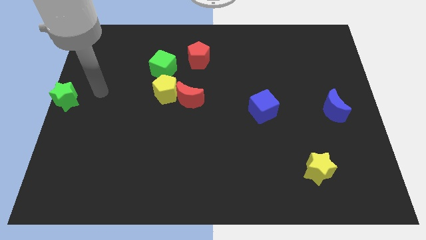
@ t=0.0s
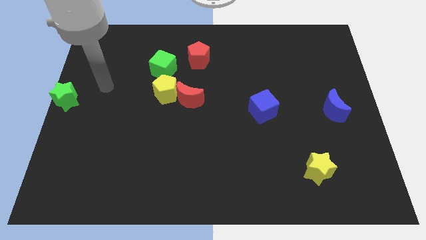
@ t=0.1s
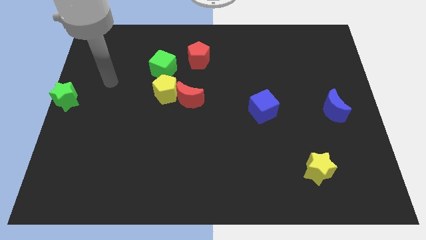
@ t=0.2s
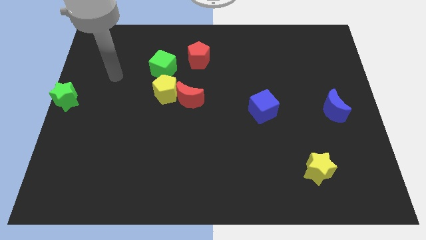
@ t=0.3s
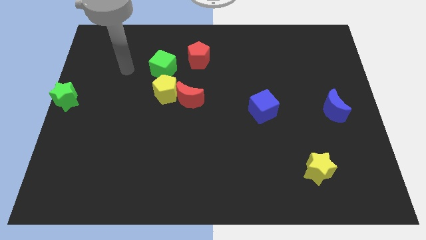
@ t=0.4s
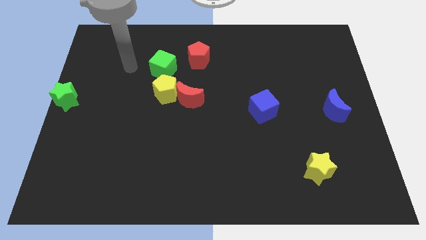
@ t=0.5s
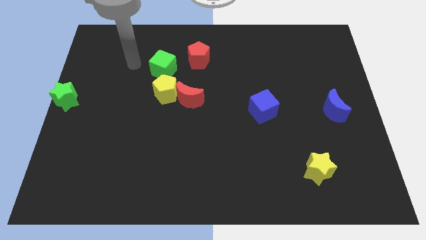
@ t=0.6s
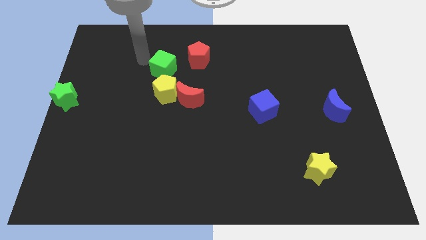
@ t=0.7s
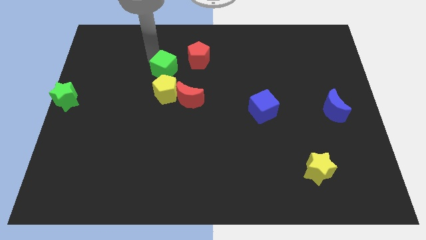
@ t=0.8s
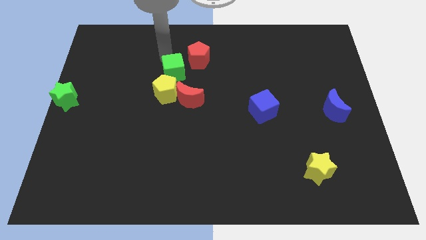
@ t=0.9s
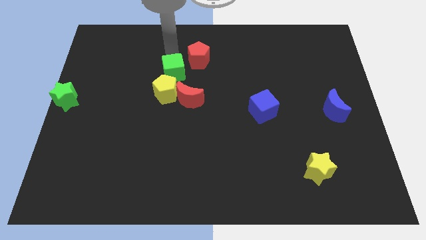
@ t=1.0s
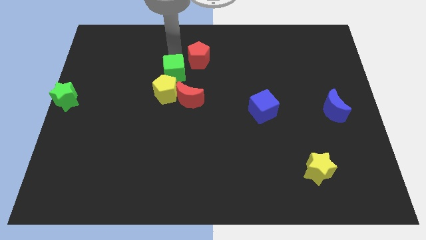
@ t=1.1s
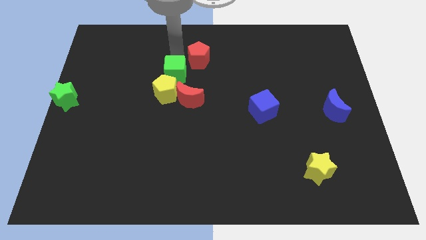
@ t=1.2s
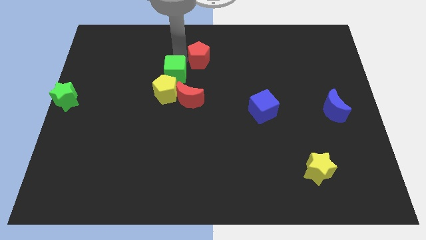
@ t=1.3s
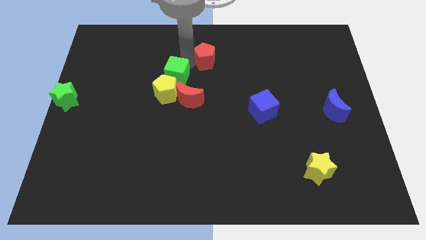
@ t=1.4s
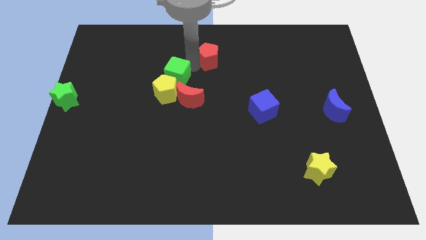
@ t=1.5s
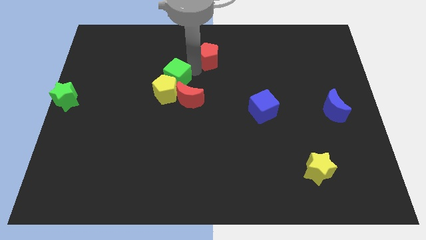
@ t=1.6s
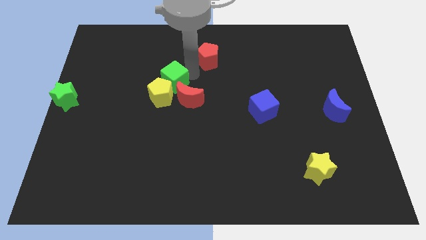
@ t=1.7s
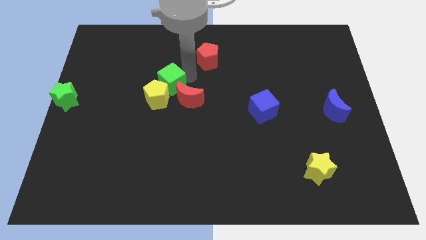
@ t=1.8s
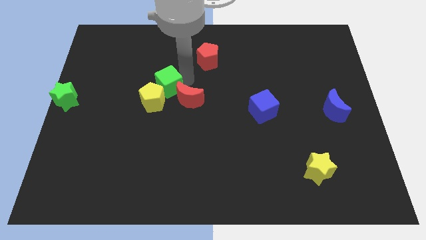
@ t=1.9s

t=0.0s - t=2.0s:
place green cube into the yellow pentagon

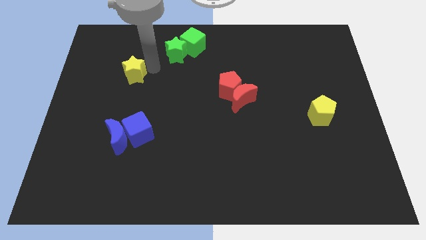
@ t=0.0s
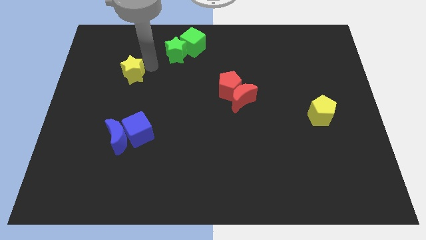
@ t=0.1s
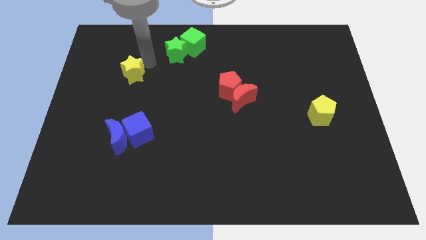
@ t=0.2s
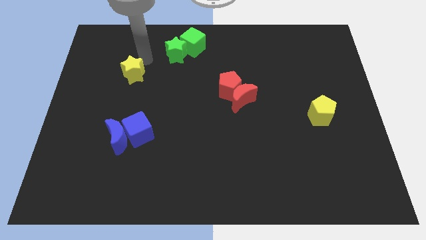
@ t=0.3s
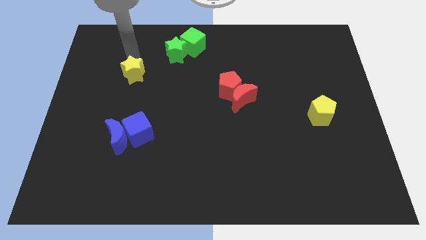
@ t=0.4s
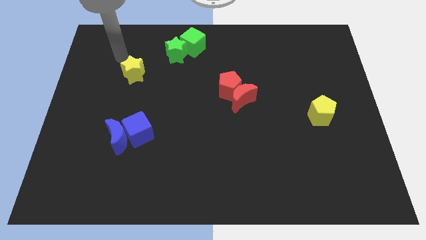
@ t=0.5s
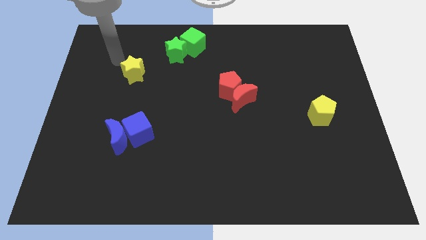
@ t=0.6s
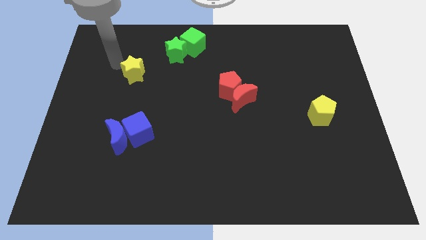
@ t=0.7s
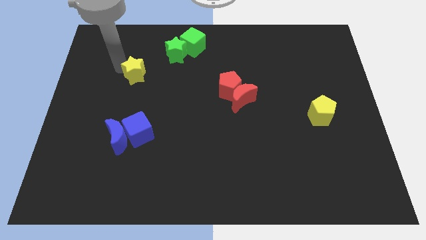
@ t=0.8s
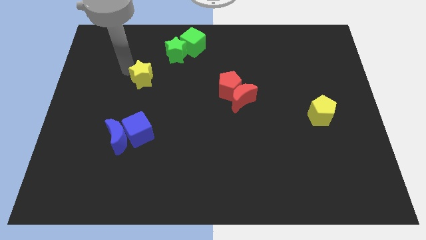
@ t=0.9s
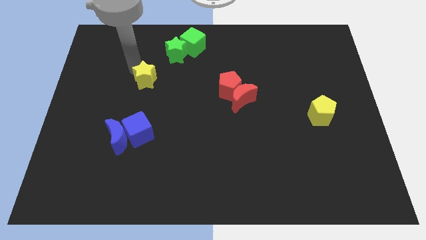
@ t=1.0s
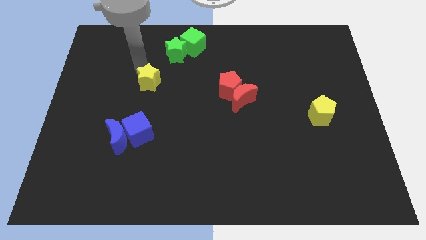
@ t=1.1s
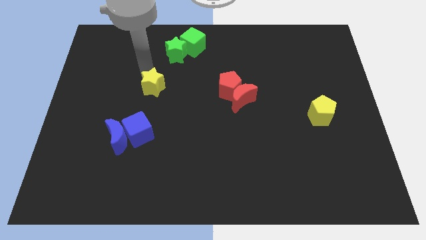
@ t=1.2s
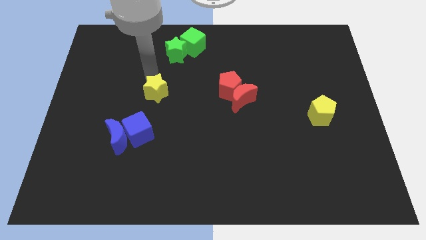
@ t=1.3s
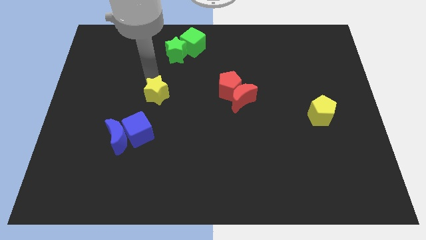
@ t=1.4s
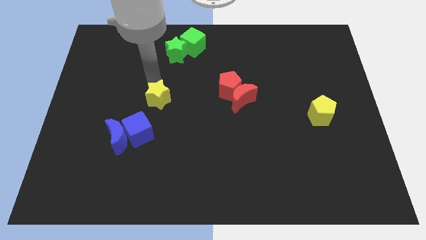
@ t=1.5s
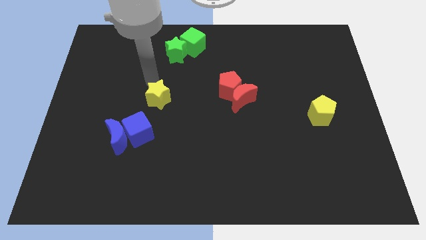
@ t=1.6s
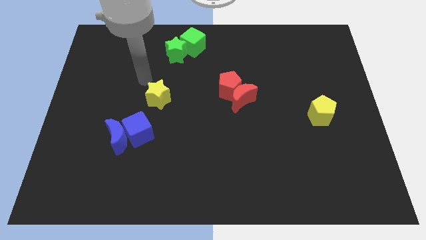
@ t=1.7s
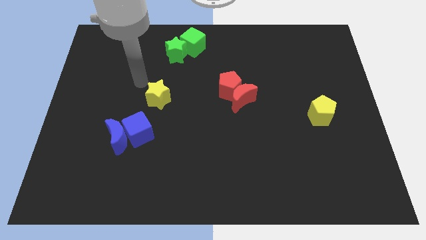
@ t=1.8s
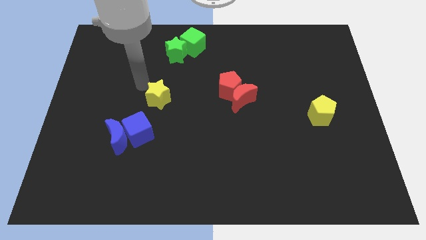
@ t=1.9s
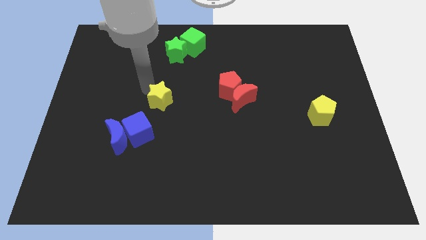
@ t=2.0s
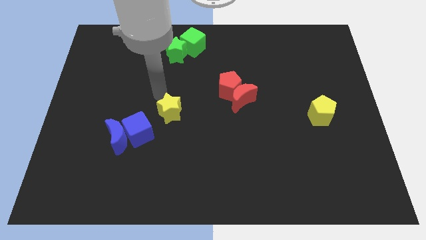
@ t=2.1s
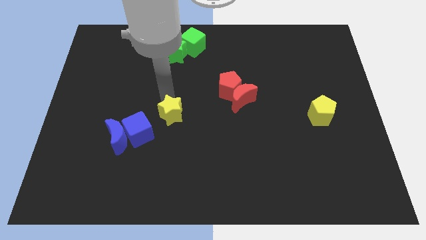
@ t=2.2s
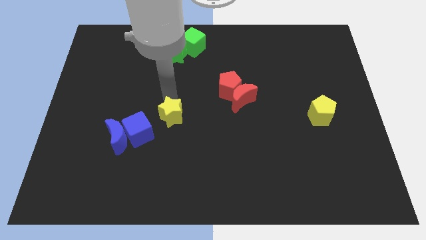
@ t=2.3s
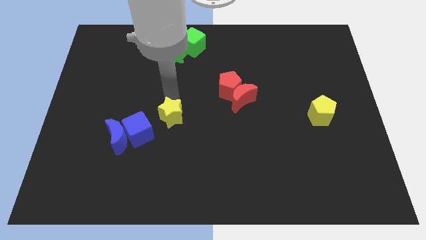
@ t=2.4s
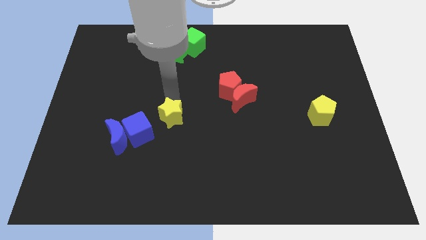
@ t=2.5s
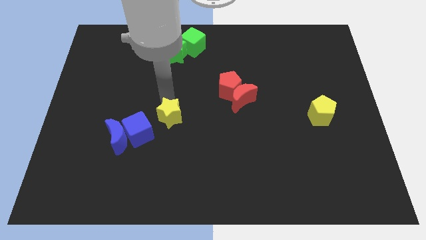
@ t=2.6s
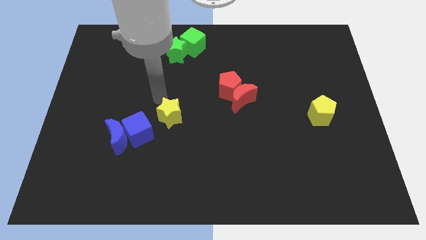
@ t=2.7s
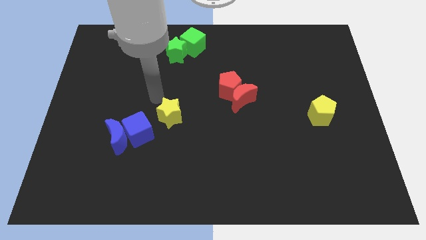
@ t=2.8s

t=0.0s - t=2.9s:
push the yellow star towards the blue cube

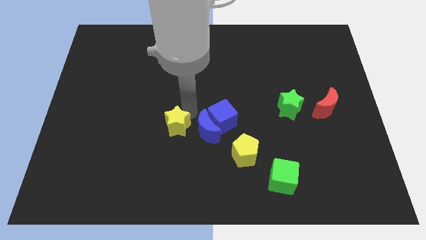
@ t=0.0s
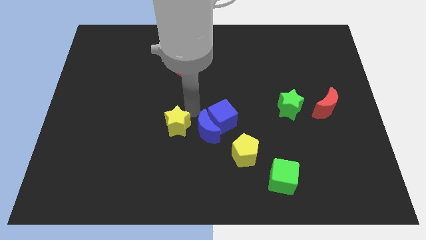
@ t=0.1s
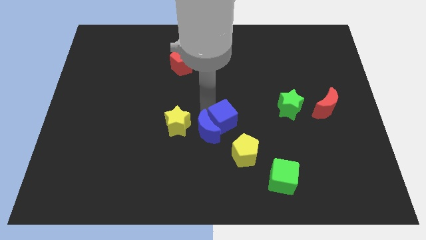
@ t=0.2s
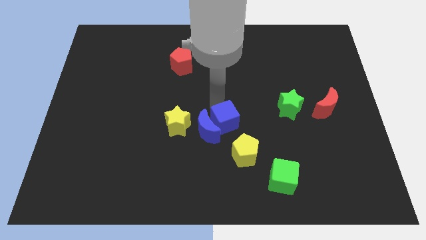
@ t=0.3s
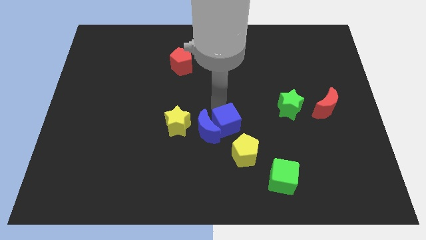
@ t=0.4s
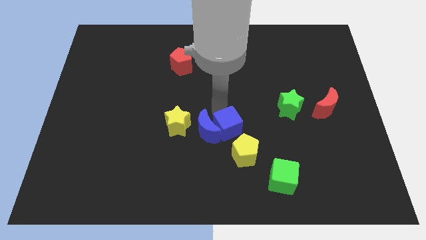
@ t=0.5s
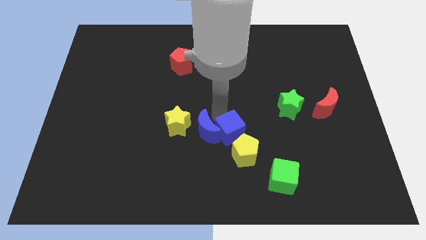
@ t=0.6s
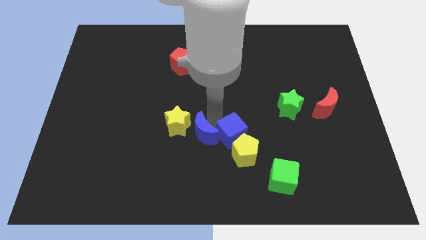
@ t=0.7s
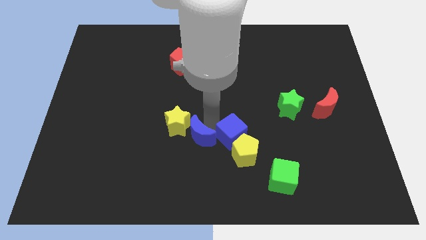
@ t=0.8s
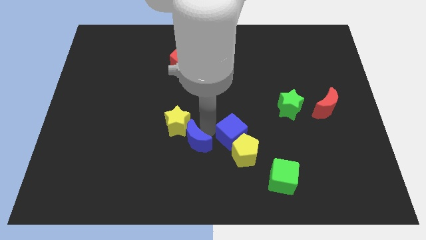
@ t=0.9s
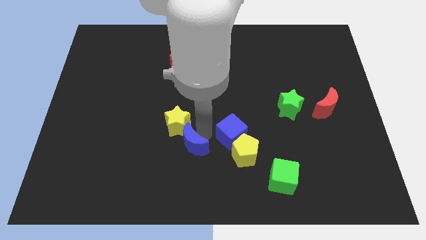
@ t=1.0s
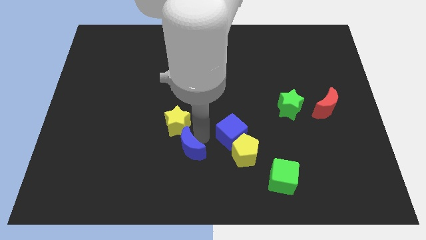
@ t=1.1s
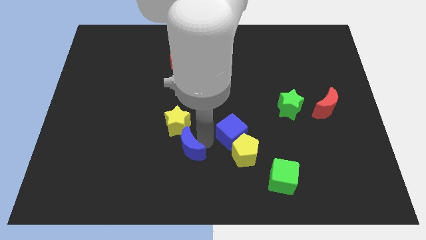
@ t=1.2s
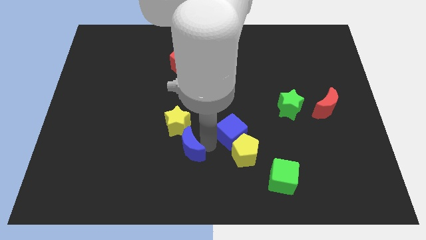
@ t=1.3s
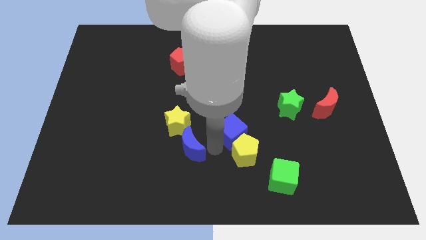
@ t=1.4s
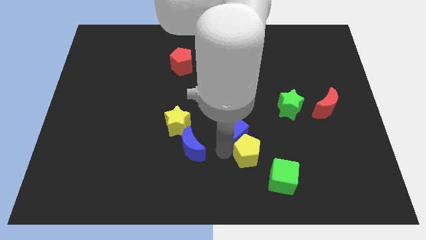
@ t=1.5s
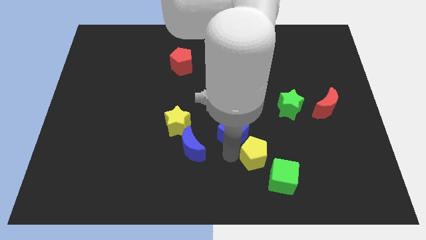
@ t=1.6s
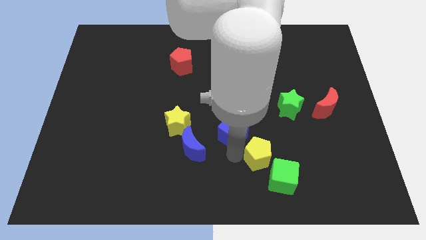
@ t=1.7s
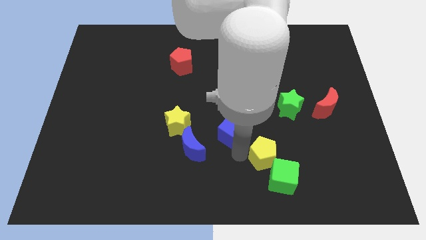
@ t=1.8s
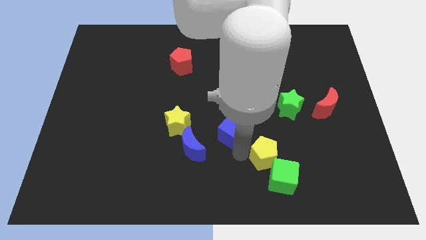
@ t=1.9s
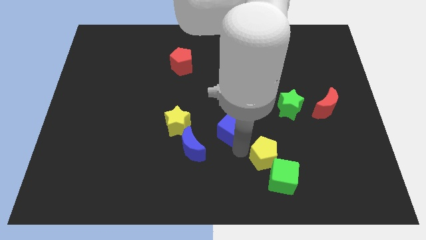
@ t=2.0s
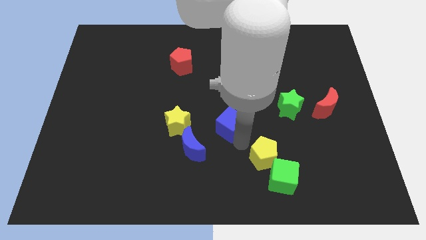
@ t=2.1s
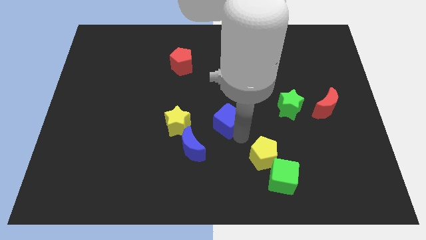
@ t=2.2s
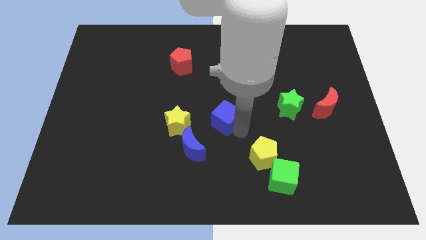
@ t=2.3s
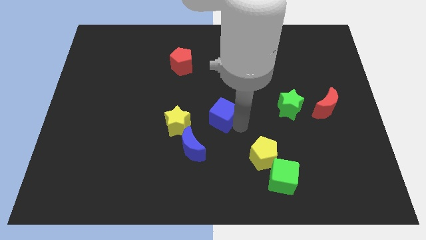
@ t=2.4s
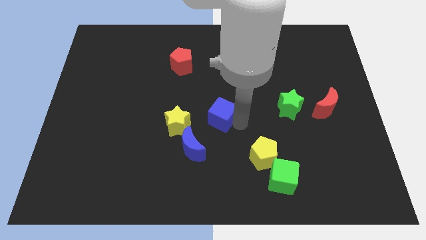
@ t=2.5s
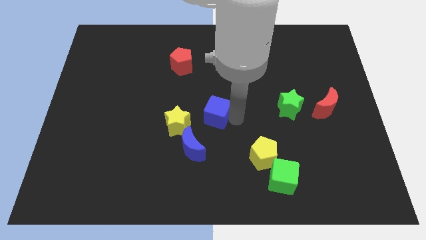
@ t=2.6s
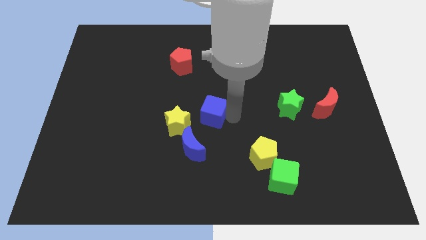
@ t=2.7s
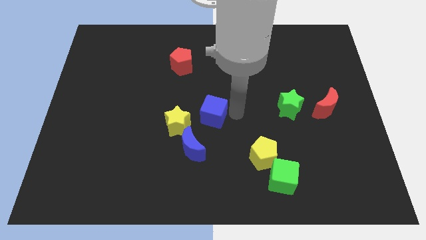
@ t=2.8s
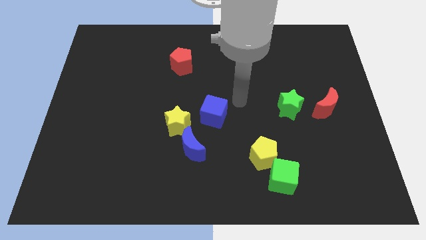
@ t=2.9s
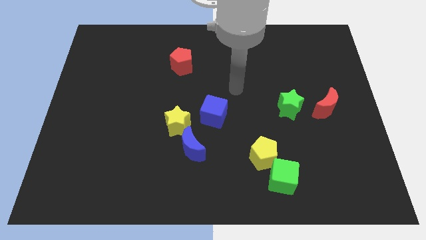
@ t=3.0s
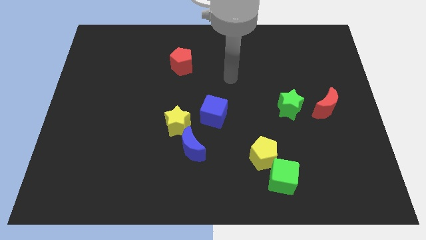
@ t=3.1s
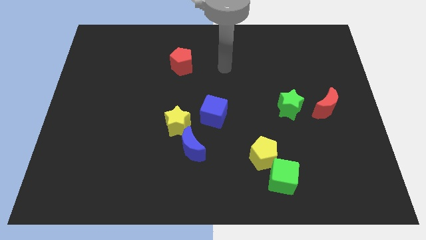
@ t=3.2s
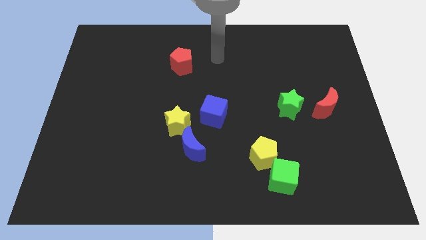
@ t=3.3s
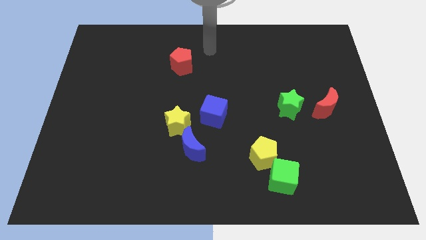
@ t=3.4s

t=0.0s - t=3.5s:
adjust the blue blocks and the yellow pentagon to form a triangle

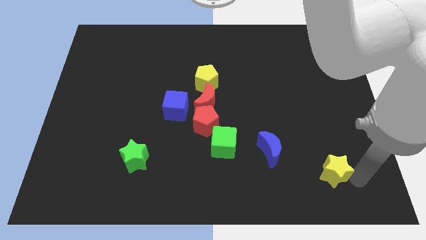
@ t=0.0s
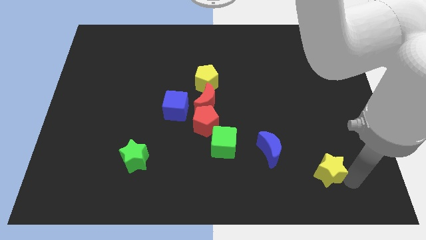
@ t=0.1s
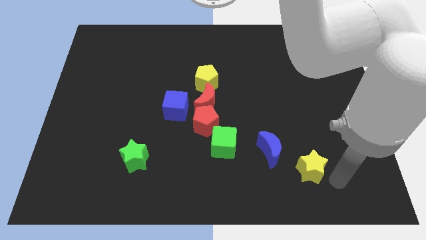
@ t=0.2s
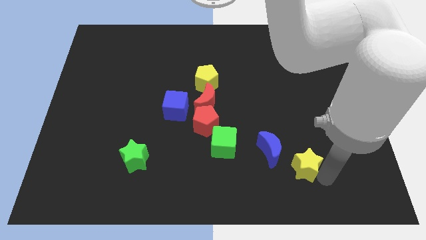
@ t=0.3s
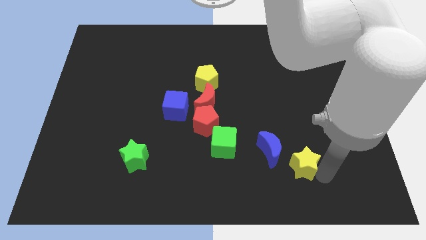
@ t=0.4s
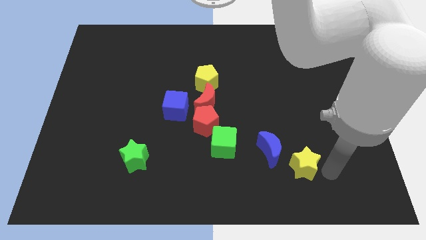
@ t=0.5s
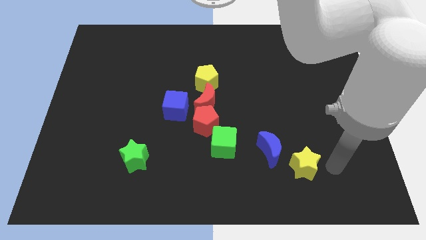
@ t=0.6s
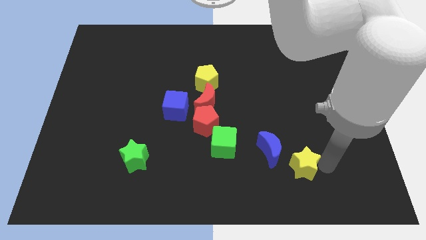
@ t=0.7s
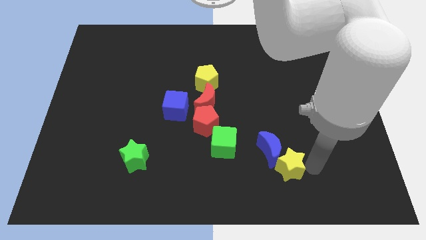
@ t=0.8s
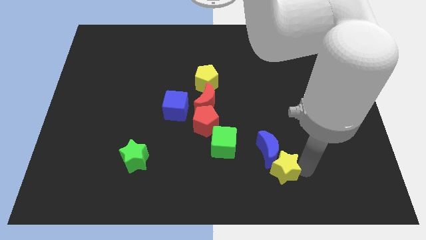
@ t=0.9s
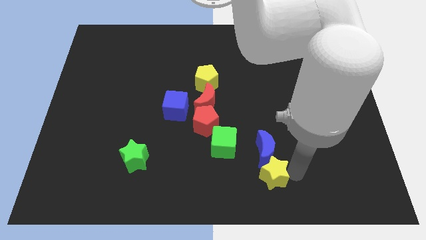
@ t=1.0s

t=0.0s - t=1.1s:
place yellow star below blue moon
